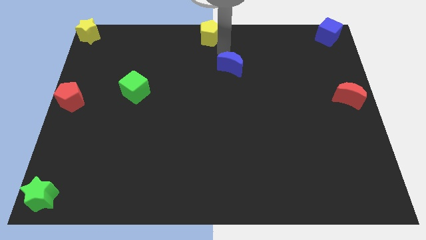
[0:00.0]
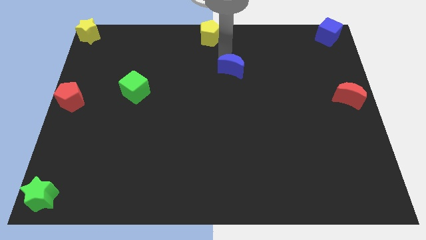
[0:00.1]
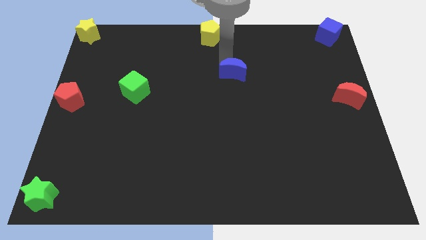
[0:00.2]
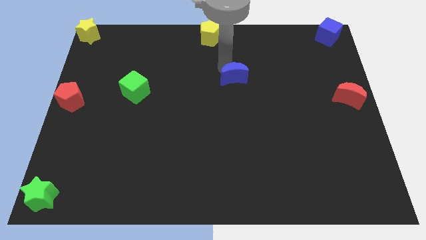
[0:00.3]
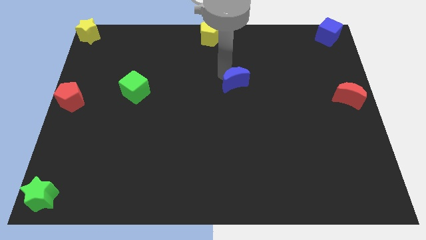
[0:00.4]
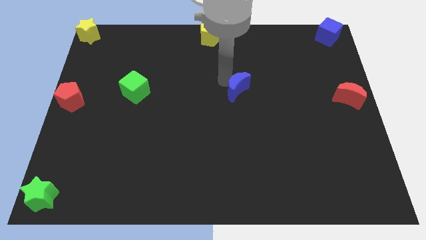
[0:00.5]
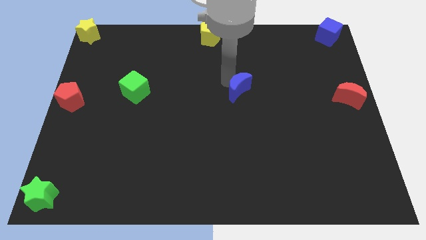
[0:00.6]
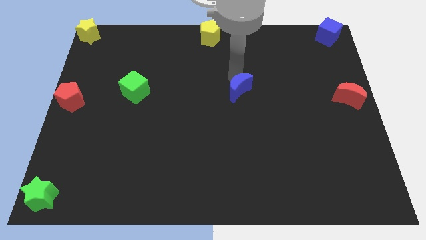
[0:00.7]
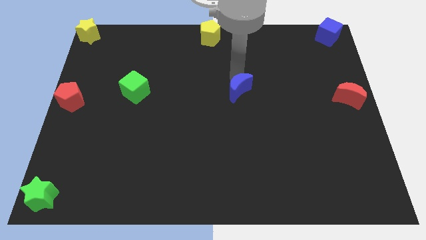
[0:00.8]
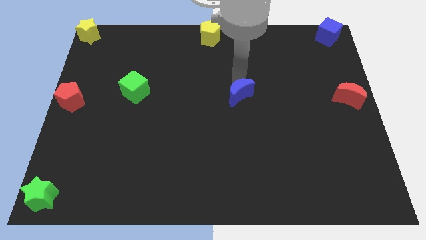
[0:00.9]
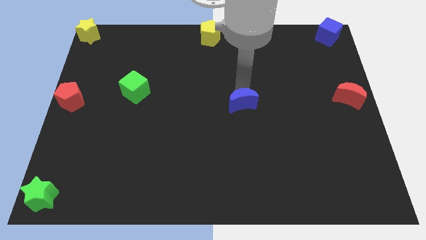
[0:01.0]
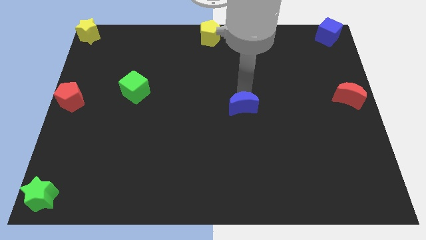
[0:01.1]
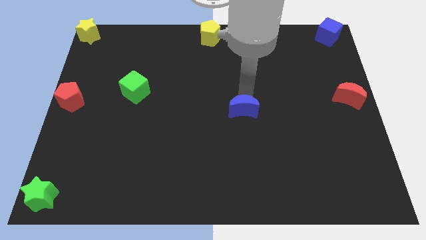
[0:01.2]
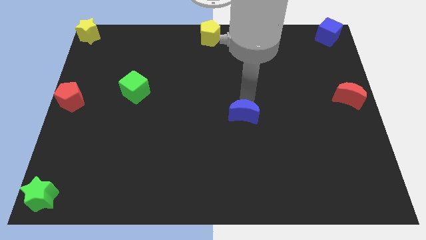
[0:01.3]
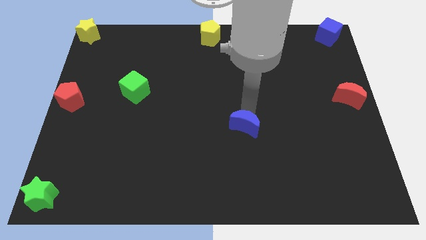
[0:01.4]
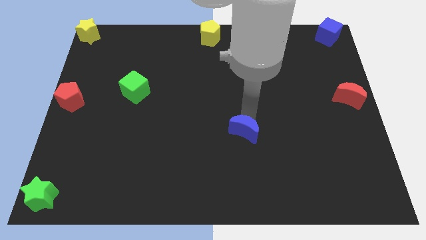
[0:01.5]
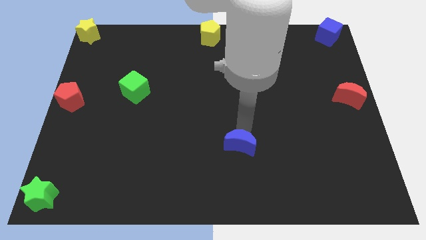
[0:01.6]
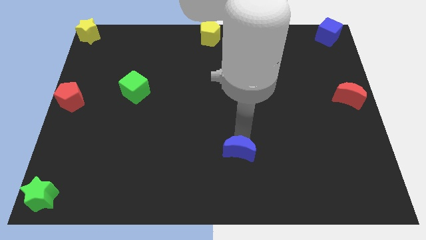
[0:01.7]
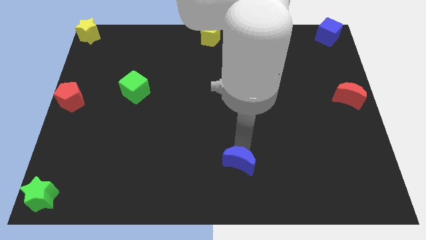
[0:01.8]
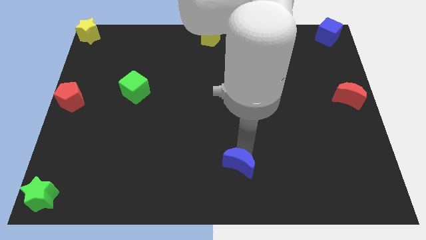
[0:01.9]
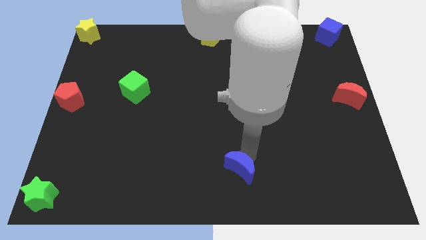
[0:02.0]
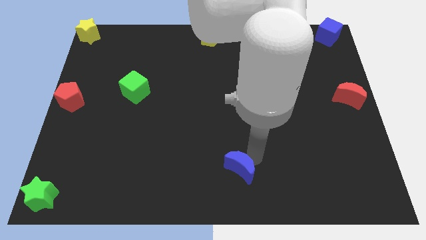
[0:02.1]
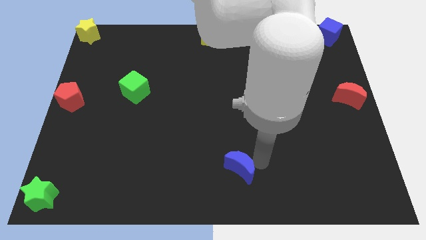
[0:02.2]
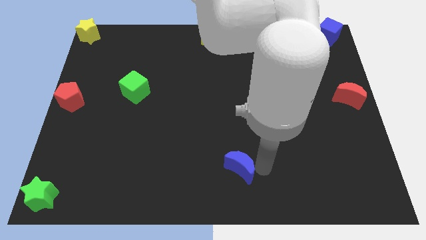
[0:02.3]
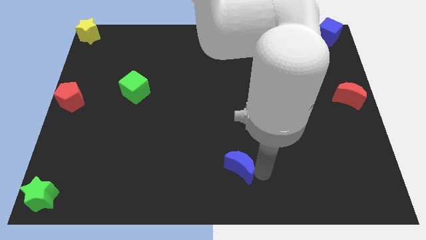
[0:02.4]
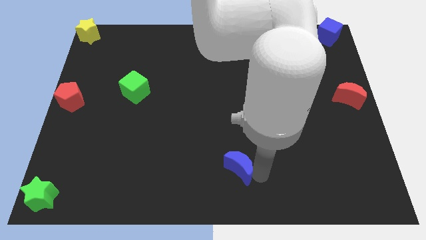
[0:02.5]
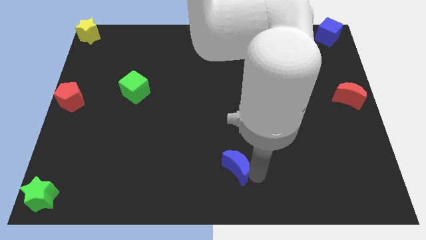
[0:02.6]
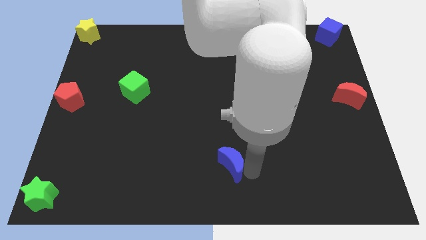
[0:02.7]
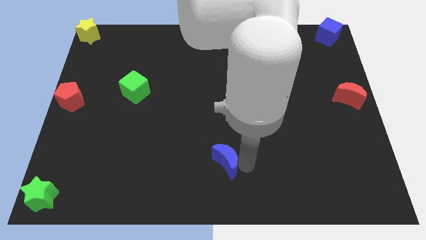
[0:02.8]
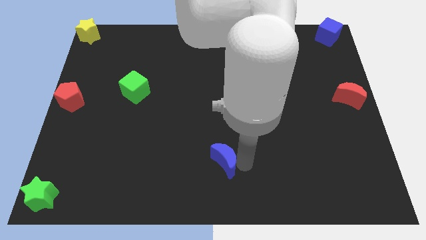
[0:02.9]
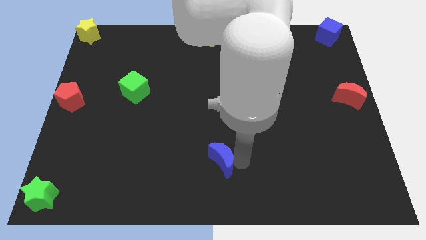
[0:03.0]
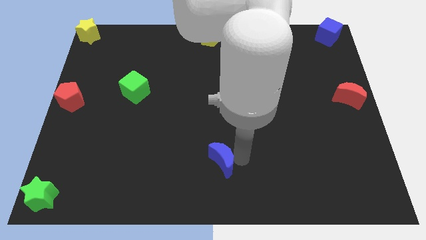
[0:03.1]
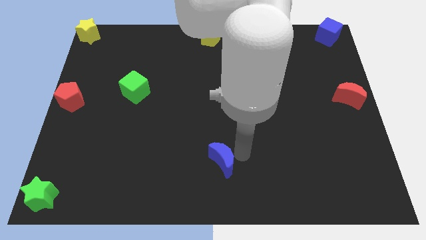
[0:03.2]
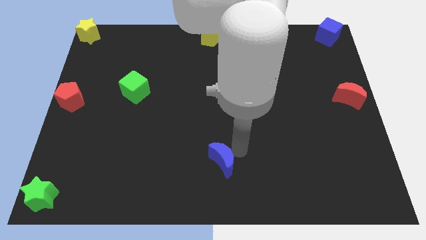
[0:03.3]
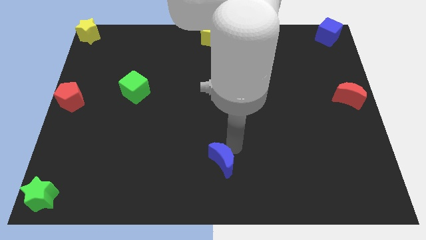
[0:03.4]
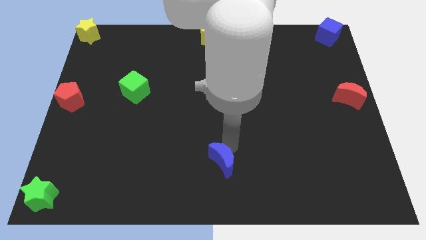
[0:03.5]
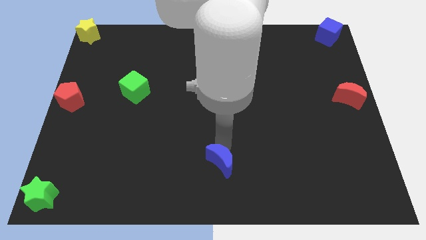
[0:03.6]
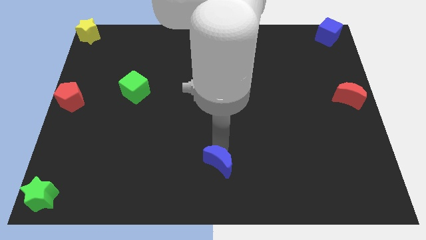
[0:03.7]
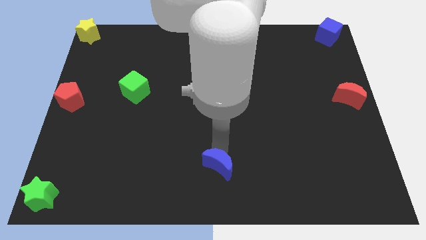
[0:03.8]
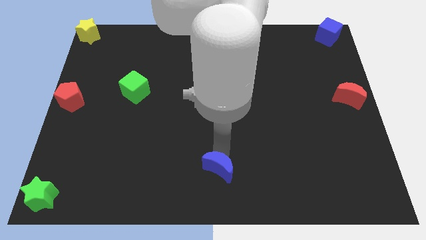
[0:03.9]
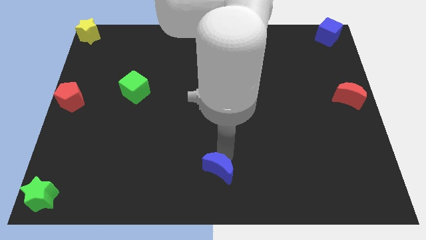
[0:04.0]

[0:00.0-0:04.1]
push the blue crescent towards the bottom center of the board

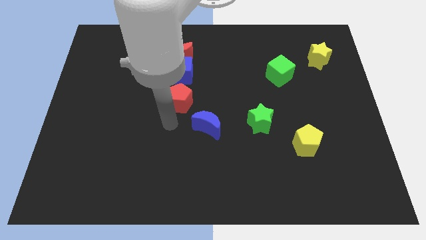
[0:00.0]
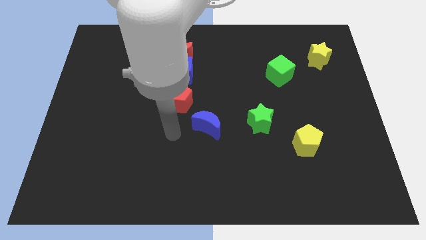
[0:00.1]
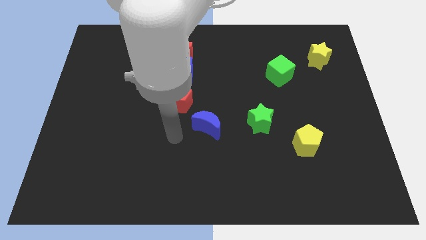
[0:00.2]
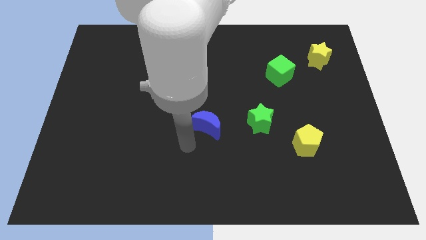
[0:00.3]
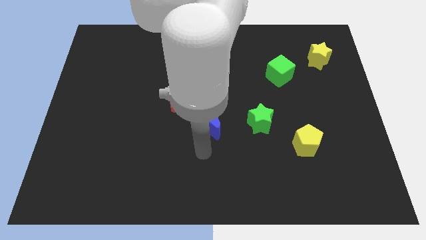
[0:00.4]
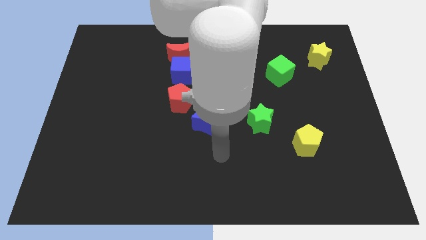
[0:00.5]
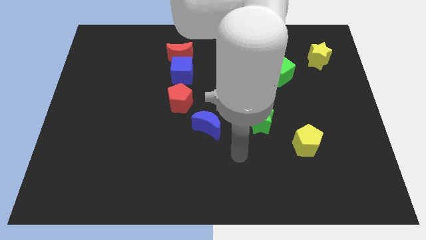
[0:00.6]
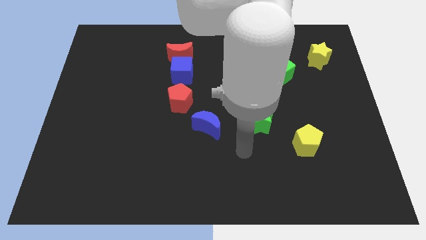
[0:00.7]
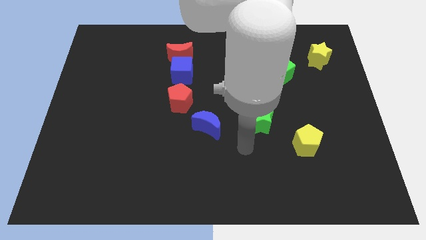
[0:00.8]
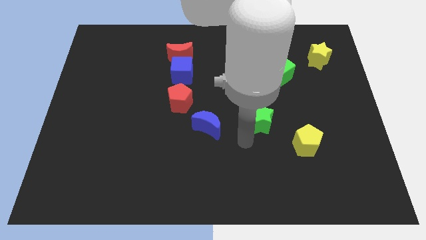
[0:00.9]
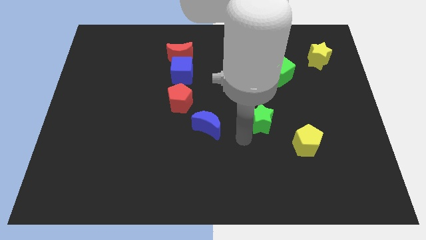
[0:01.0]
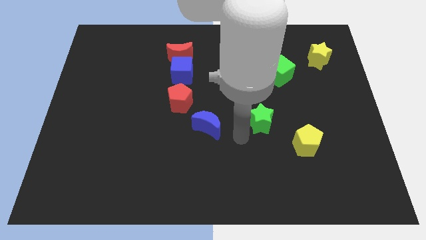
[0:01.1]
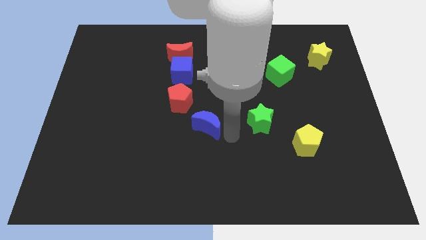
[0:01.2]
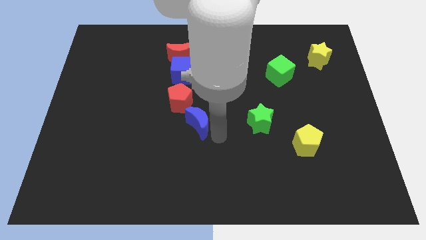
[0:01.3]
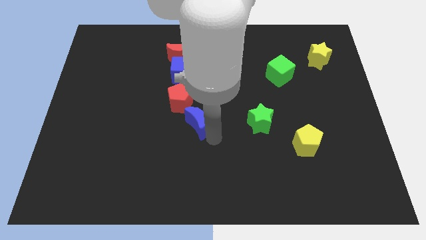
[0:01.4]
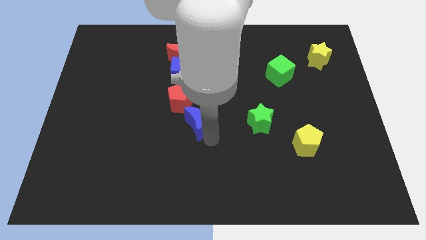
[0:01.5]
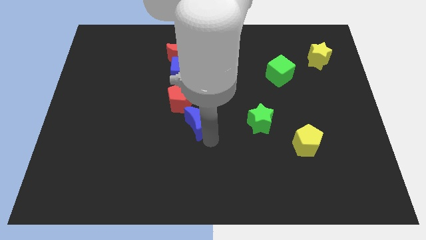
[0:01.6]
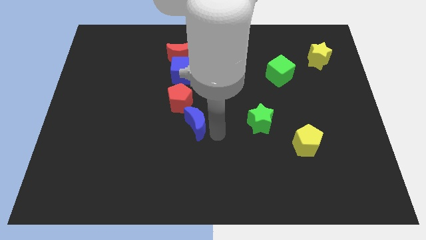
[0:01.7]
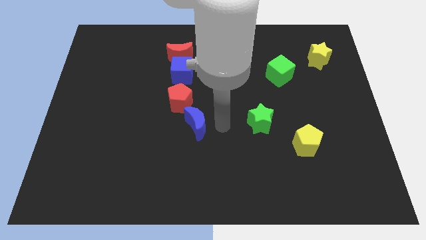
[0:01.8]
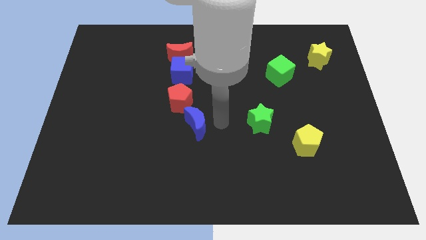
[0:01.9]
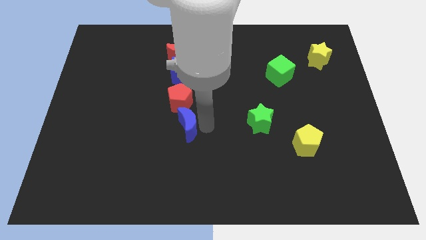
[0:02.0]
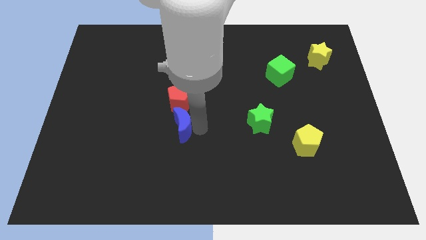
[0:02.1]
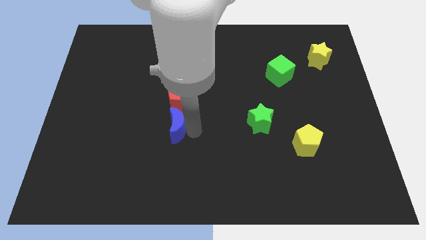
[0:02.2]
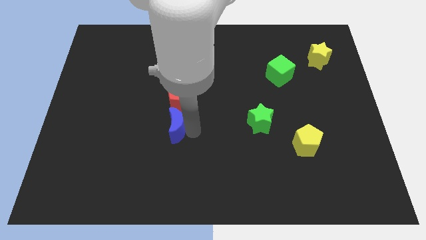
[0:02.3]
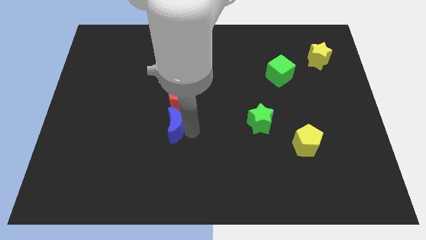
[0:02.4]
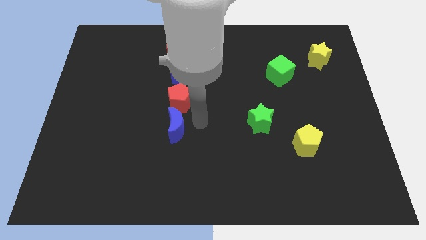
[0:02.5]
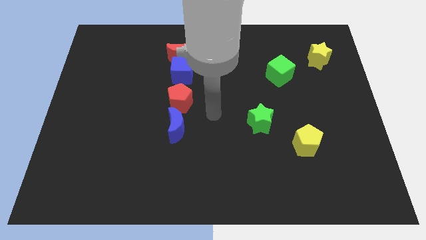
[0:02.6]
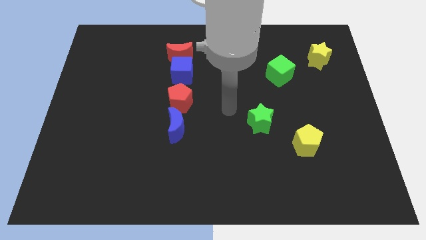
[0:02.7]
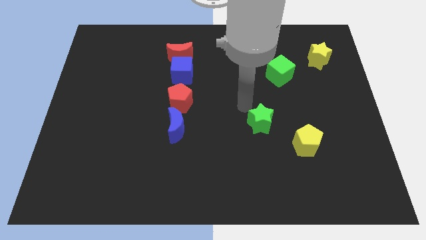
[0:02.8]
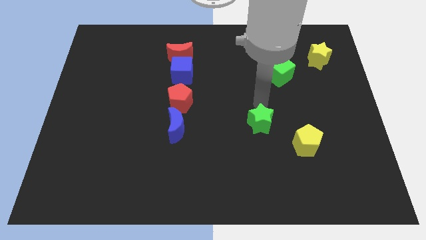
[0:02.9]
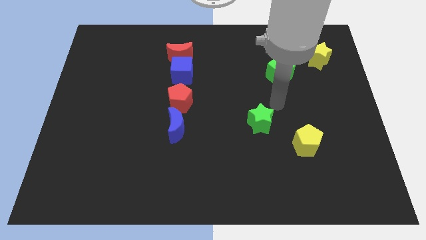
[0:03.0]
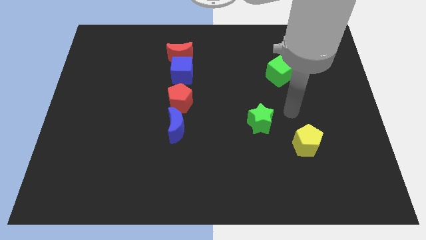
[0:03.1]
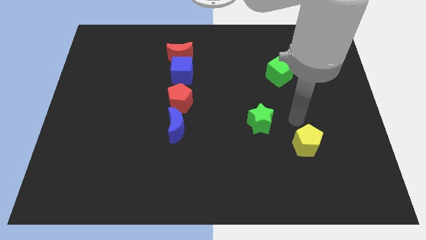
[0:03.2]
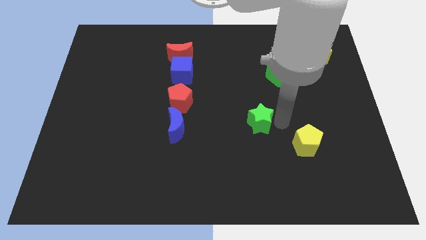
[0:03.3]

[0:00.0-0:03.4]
push the blue crescent to the bottom of the red pentagon

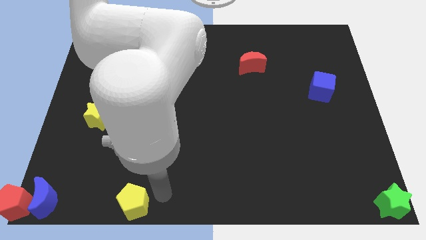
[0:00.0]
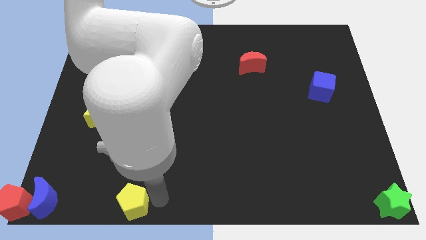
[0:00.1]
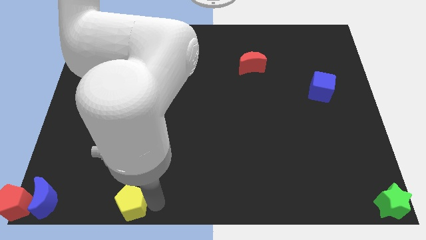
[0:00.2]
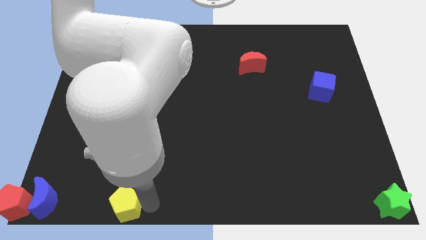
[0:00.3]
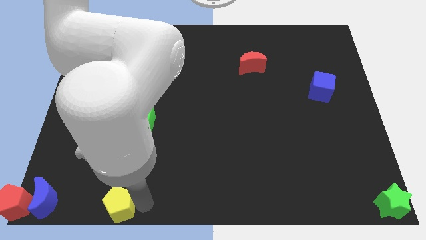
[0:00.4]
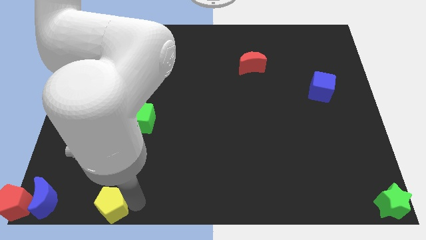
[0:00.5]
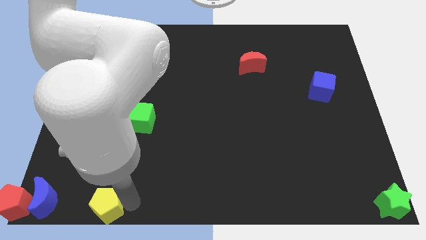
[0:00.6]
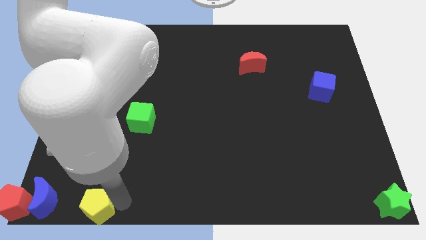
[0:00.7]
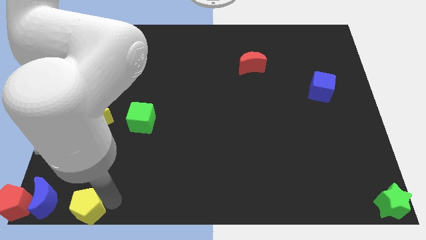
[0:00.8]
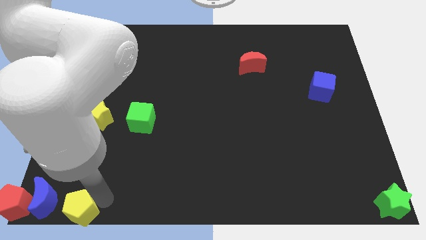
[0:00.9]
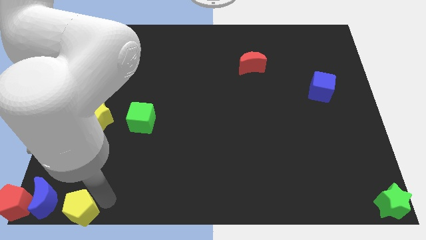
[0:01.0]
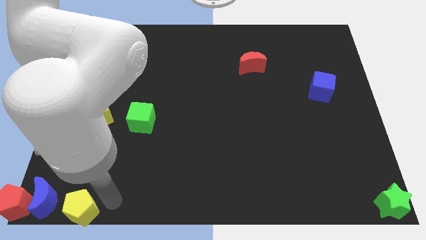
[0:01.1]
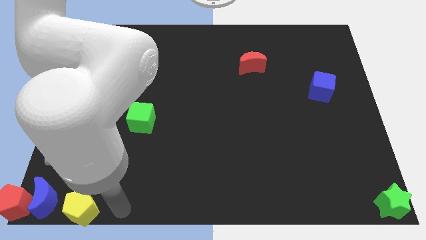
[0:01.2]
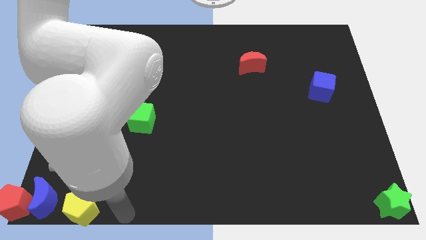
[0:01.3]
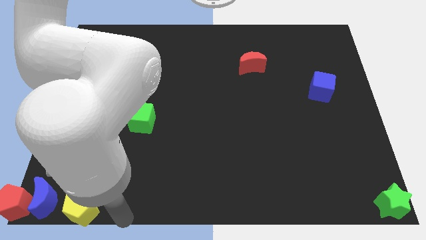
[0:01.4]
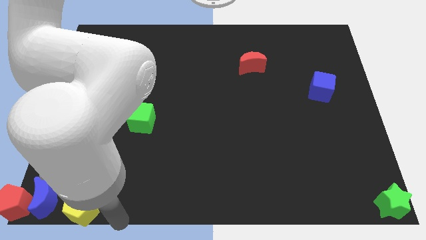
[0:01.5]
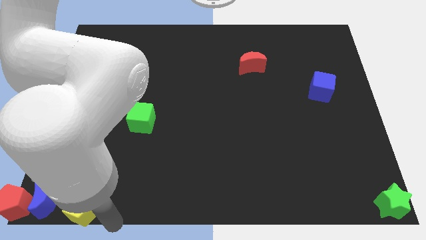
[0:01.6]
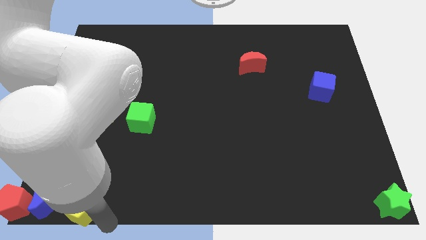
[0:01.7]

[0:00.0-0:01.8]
move yellow pentagon beside blue moon
